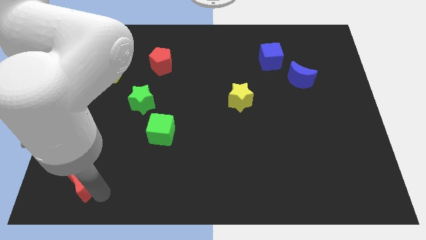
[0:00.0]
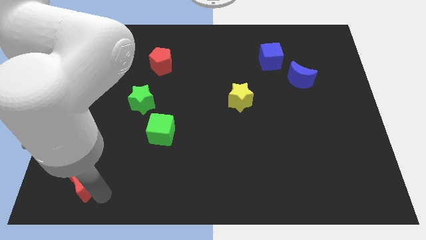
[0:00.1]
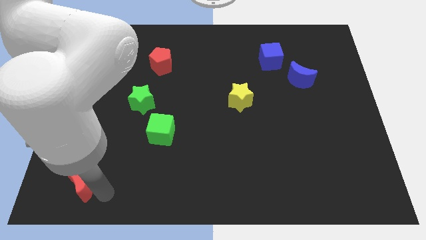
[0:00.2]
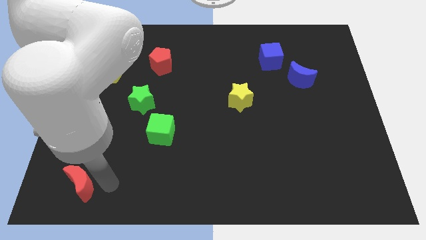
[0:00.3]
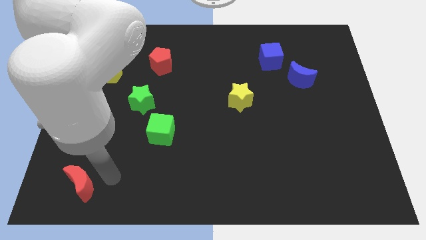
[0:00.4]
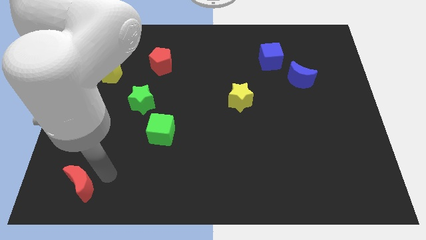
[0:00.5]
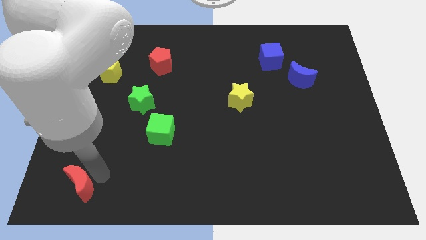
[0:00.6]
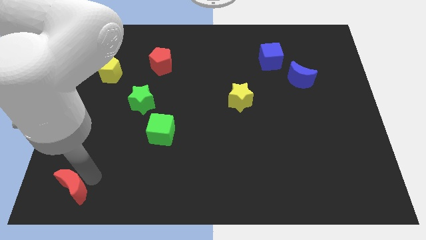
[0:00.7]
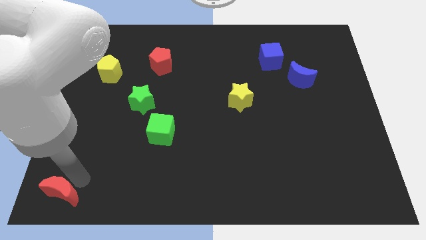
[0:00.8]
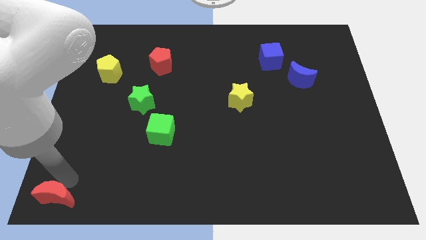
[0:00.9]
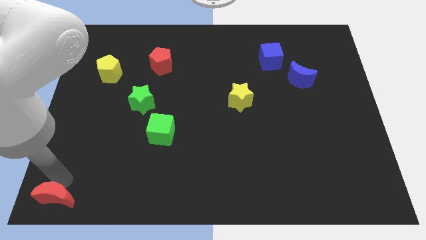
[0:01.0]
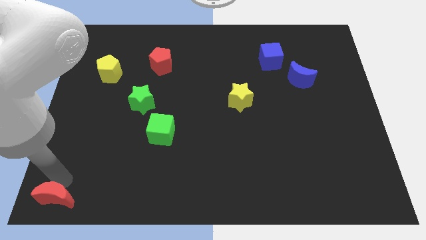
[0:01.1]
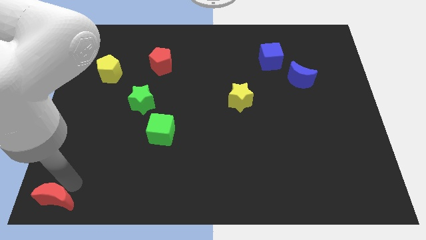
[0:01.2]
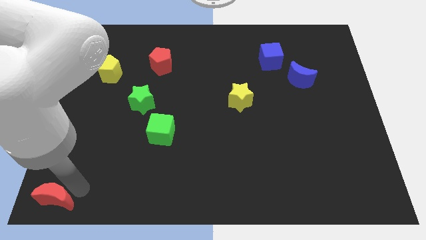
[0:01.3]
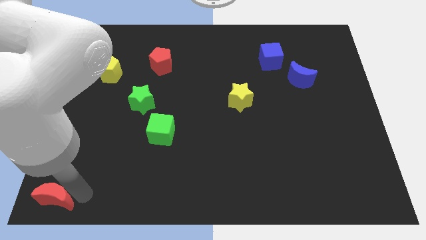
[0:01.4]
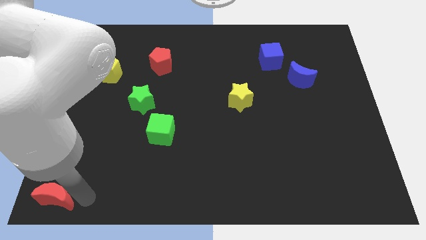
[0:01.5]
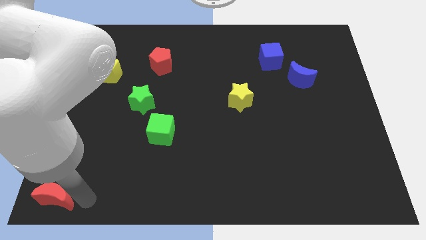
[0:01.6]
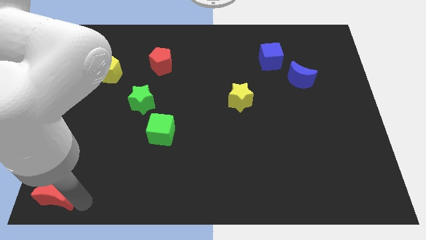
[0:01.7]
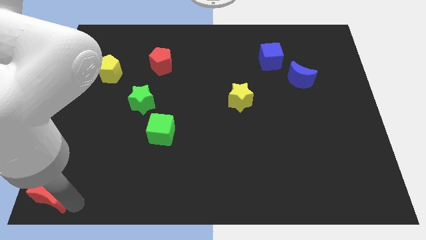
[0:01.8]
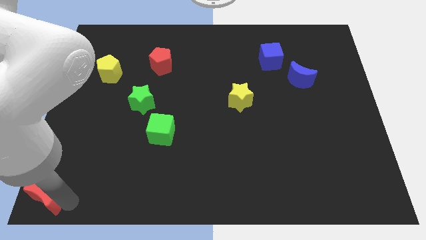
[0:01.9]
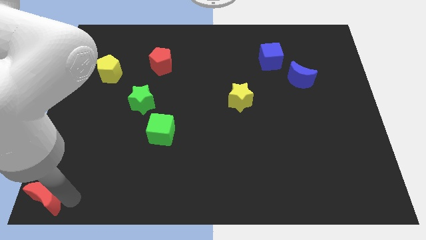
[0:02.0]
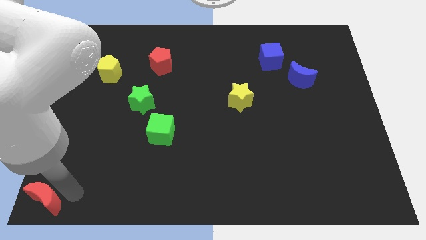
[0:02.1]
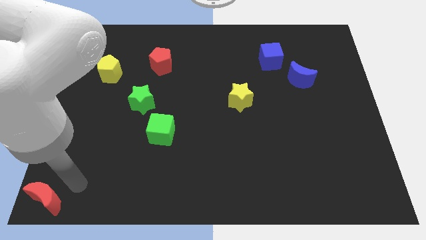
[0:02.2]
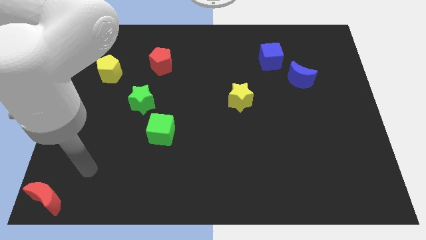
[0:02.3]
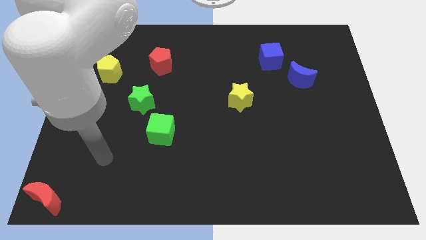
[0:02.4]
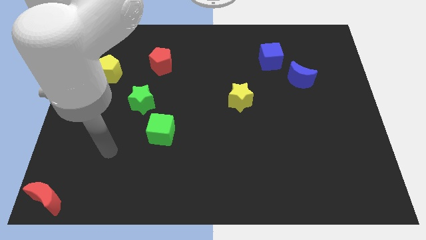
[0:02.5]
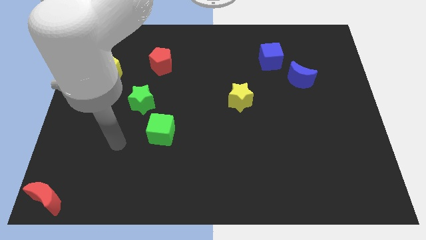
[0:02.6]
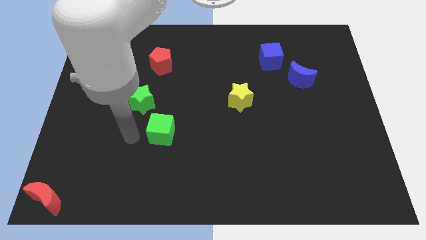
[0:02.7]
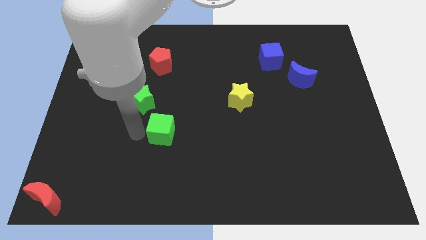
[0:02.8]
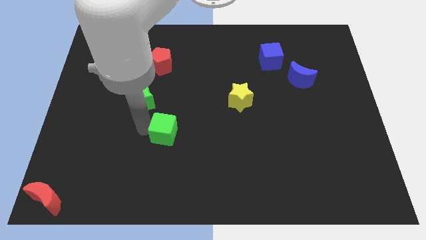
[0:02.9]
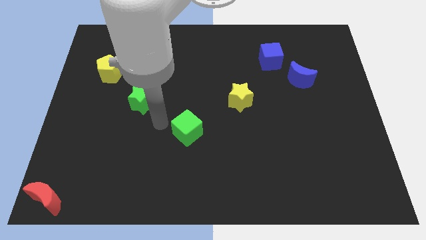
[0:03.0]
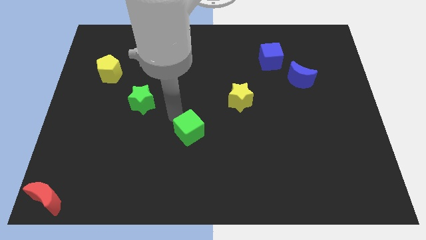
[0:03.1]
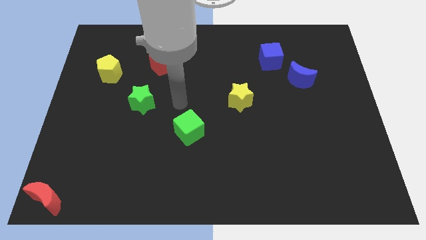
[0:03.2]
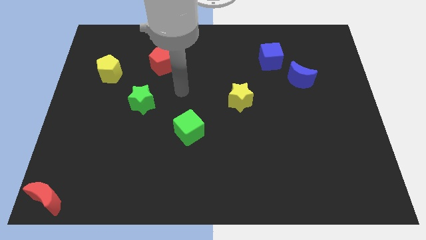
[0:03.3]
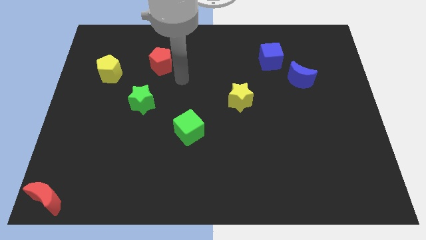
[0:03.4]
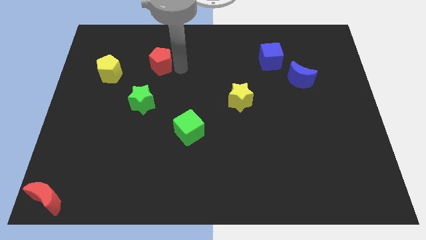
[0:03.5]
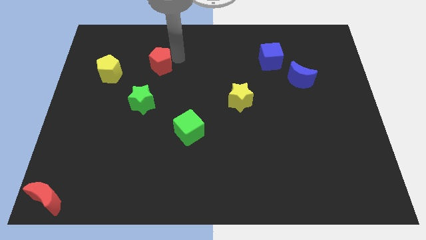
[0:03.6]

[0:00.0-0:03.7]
push red moon green cube and yellow star in a diagonal line

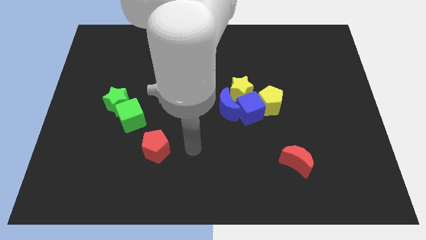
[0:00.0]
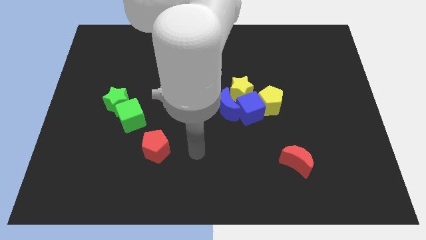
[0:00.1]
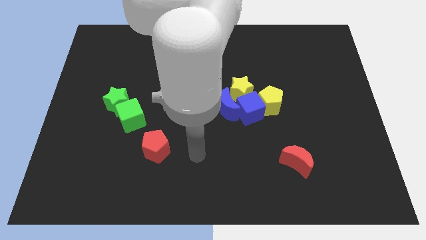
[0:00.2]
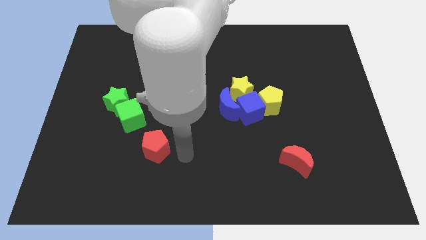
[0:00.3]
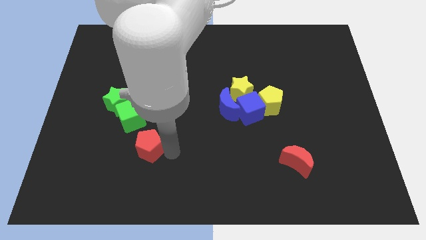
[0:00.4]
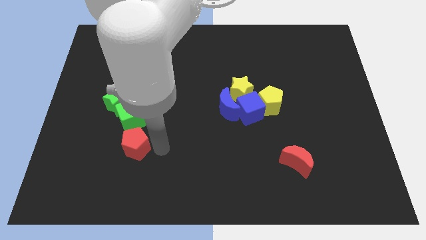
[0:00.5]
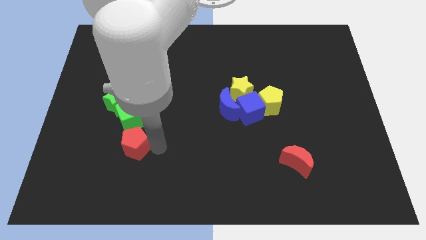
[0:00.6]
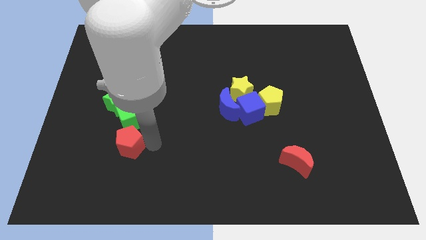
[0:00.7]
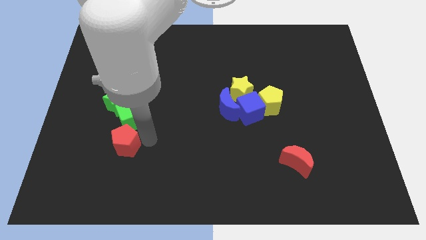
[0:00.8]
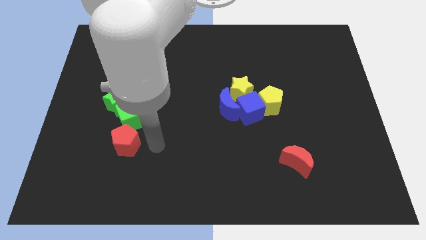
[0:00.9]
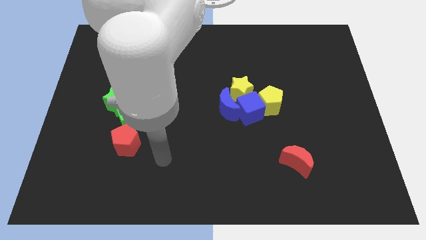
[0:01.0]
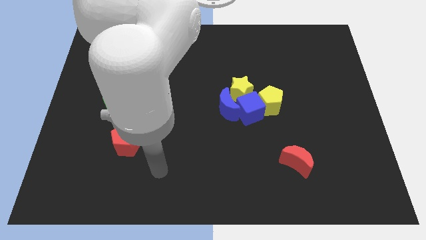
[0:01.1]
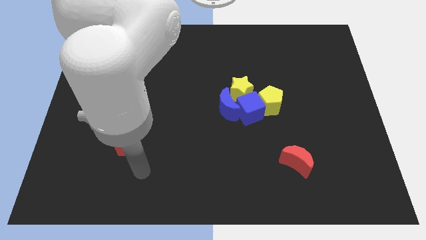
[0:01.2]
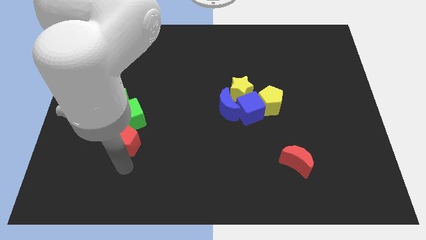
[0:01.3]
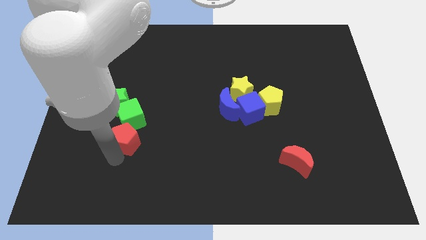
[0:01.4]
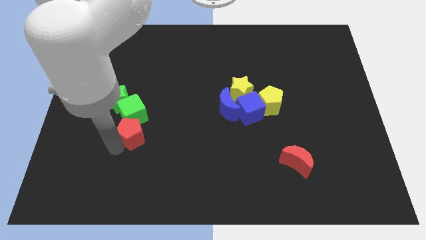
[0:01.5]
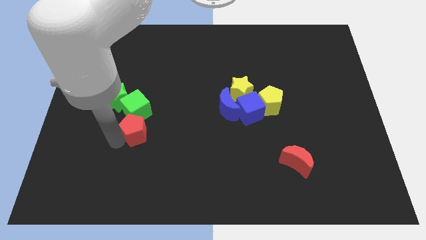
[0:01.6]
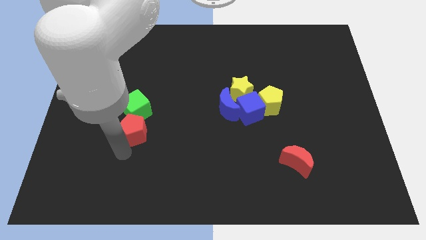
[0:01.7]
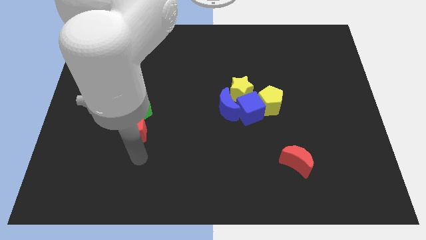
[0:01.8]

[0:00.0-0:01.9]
move the red pentagon to the bottom of green cube

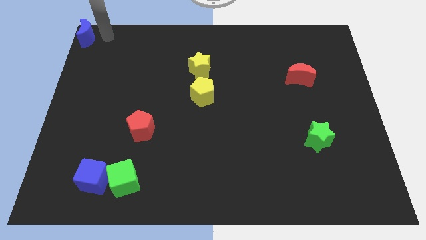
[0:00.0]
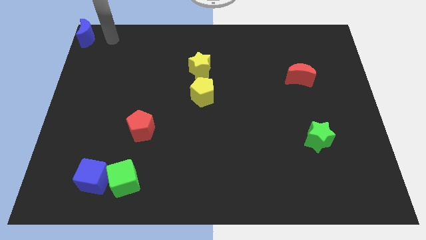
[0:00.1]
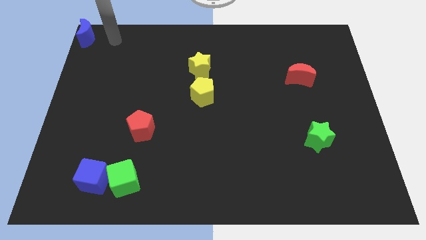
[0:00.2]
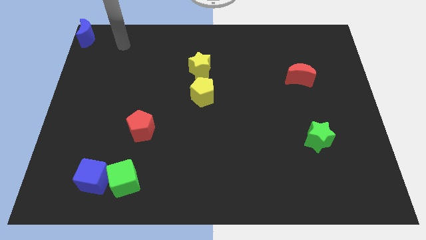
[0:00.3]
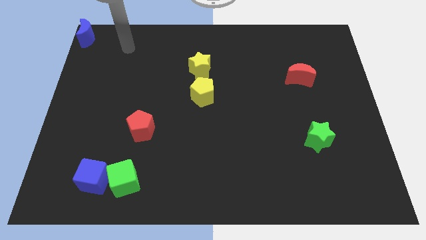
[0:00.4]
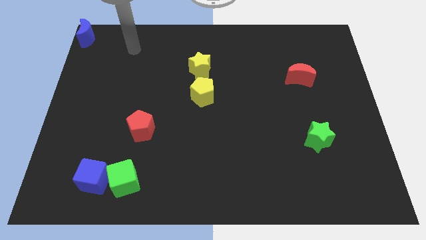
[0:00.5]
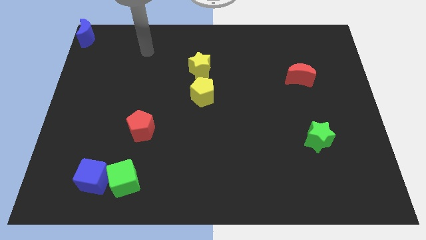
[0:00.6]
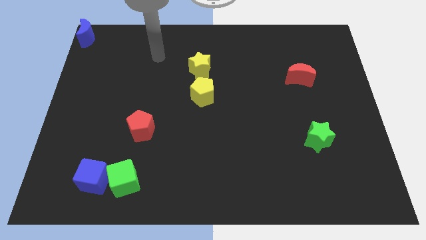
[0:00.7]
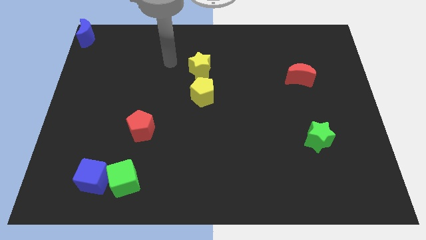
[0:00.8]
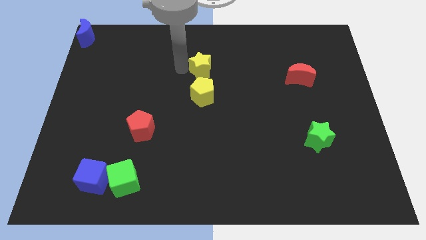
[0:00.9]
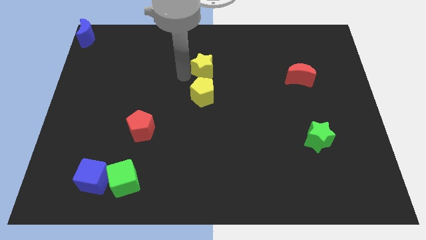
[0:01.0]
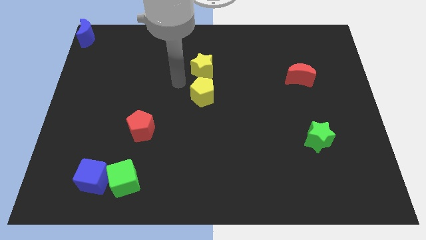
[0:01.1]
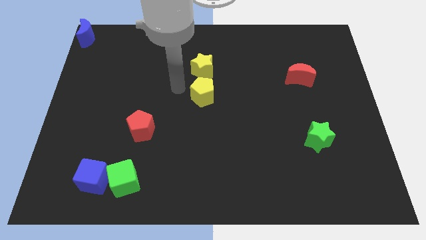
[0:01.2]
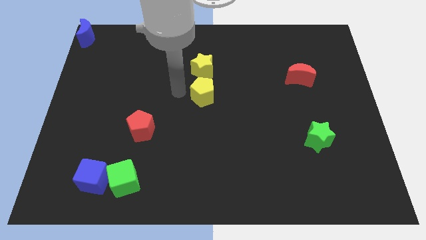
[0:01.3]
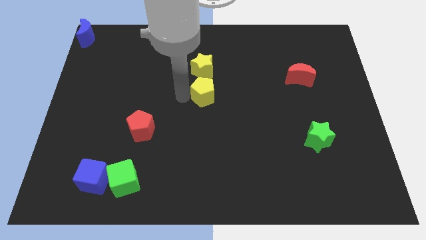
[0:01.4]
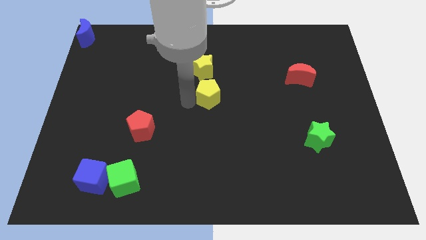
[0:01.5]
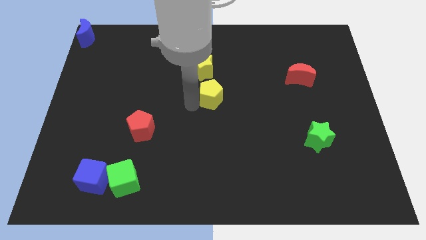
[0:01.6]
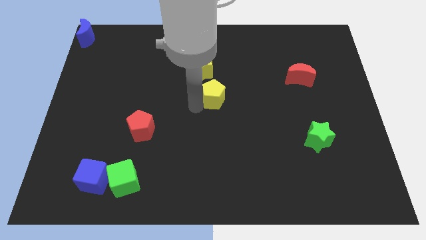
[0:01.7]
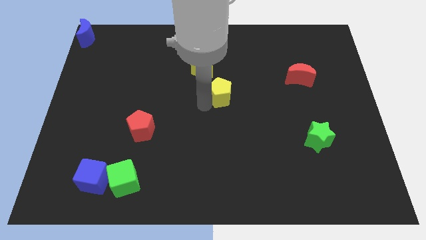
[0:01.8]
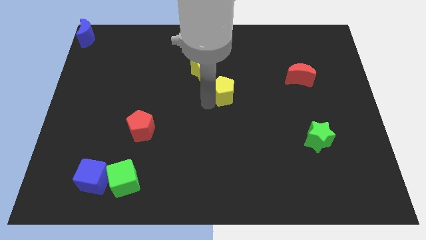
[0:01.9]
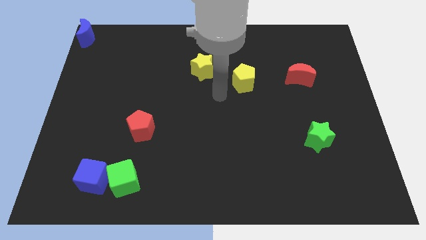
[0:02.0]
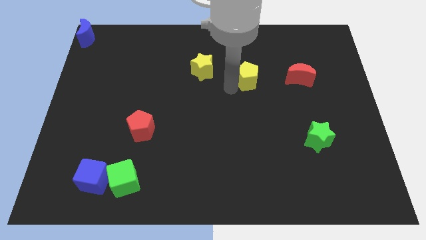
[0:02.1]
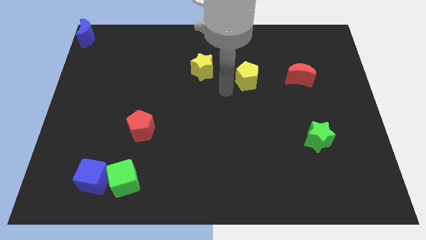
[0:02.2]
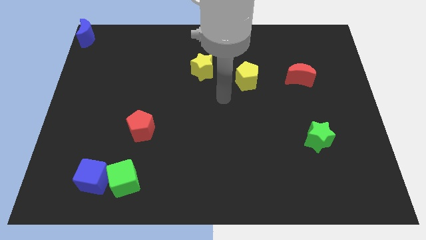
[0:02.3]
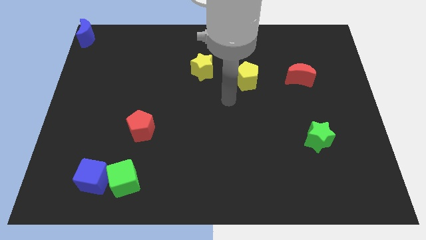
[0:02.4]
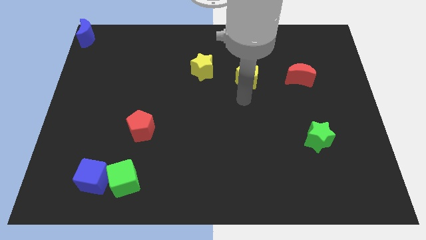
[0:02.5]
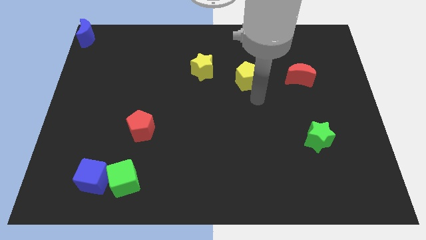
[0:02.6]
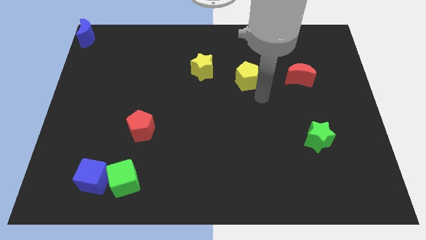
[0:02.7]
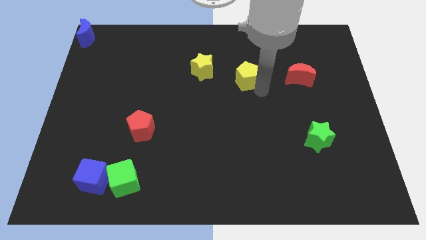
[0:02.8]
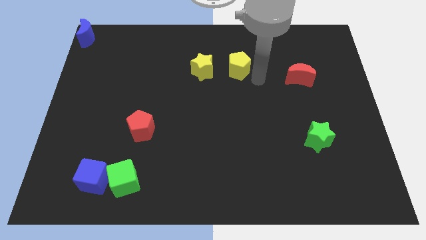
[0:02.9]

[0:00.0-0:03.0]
place the yellow pentagon in between the yellow star and the red moon

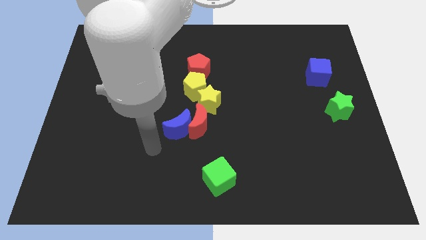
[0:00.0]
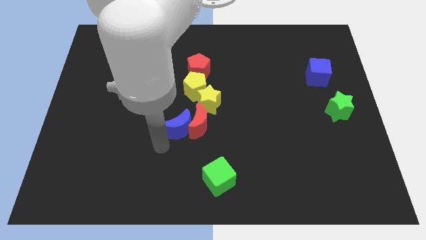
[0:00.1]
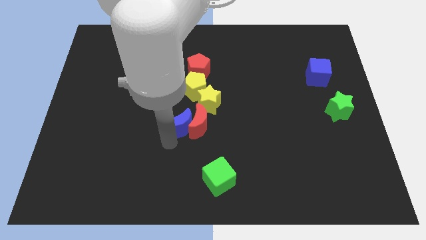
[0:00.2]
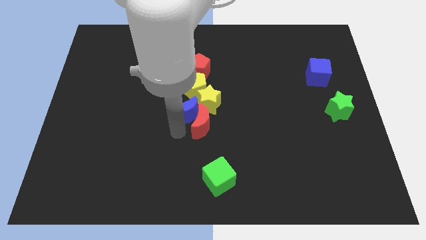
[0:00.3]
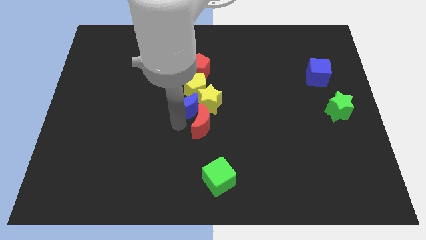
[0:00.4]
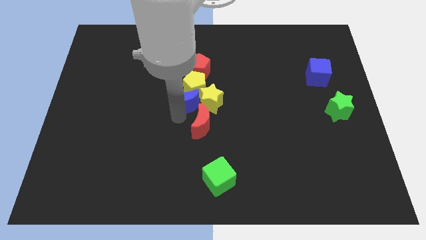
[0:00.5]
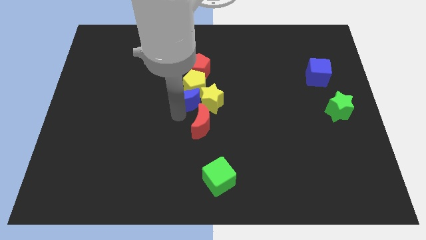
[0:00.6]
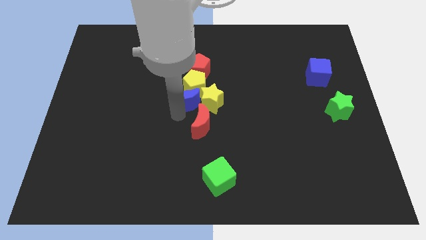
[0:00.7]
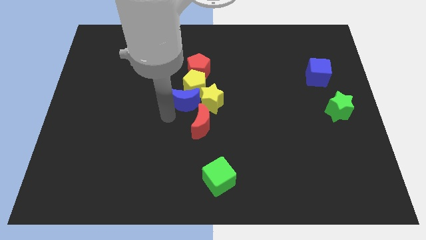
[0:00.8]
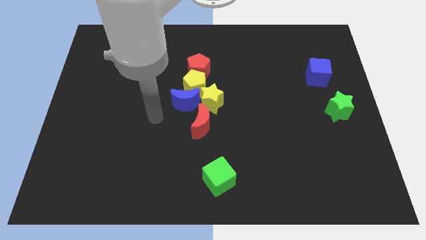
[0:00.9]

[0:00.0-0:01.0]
move the blue moon below the yellow pentagon
